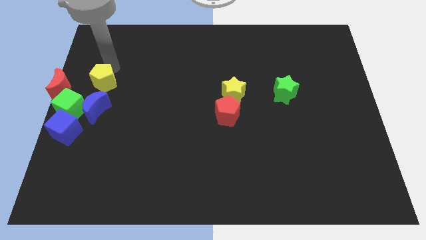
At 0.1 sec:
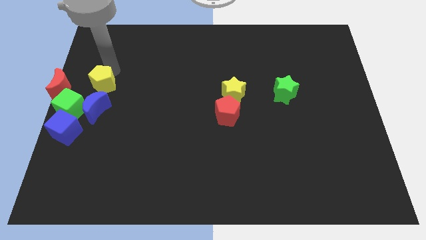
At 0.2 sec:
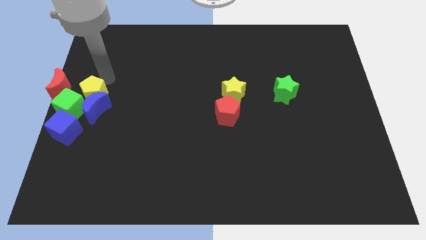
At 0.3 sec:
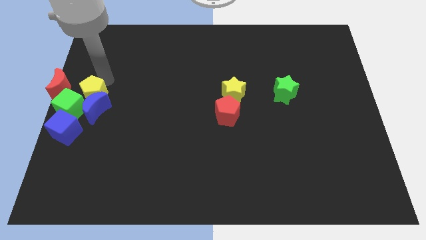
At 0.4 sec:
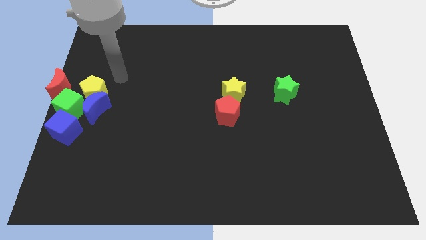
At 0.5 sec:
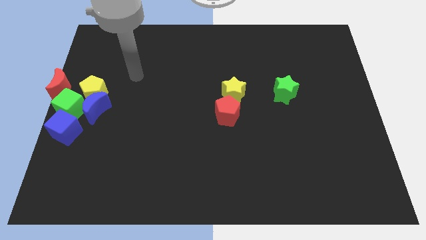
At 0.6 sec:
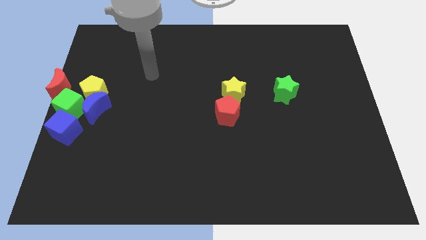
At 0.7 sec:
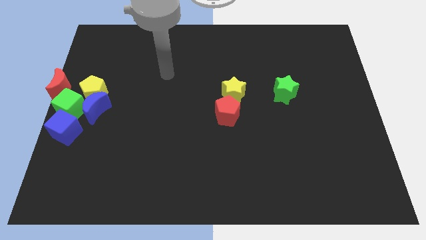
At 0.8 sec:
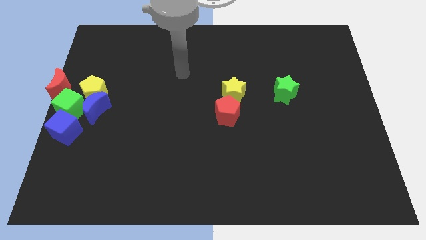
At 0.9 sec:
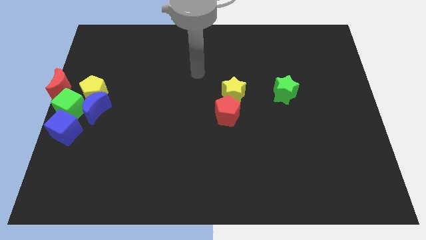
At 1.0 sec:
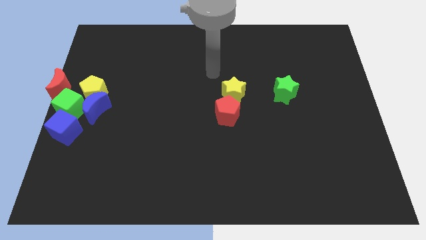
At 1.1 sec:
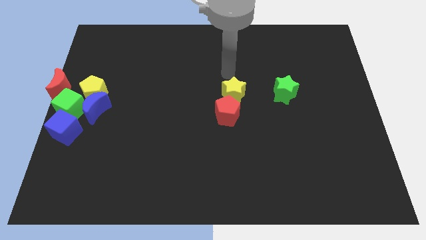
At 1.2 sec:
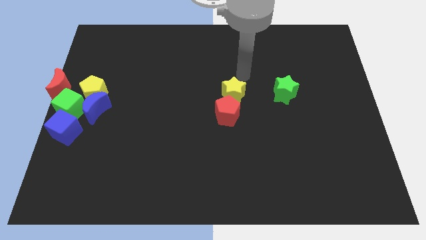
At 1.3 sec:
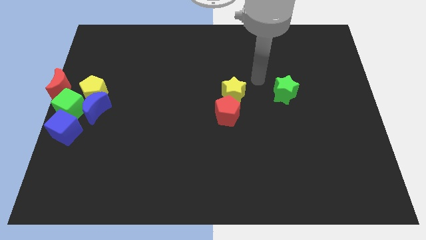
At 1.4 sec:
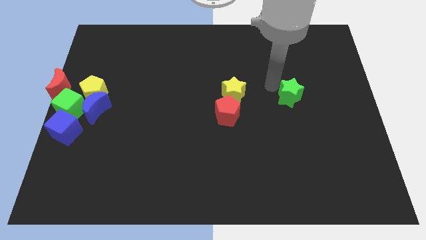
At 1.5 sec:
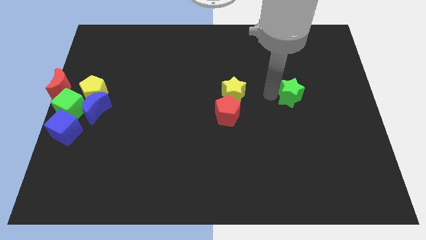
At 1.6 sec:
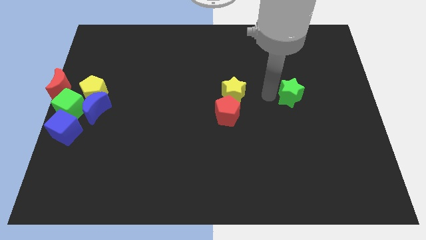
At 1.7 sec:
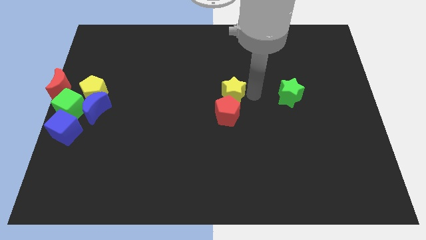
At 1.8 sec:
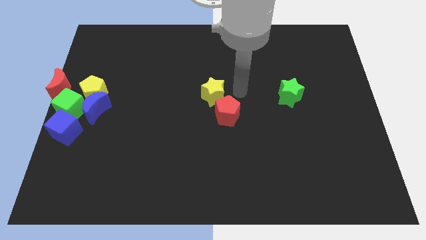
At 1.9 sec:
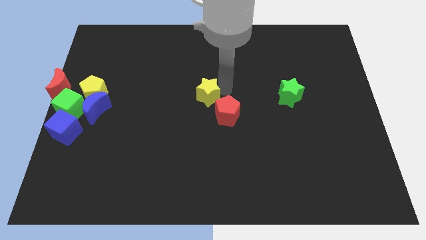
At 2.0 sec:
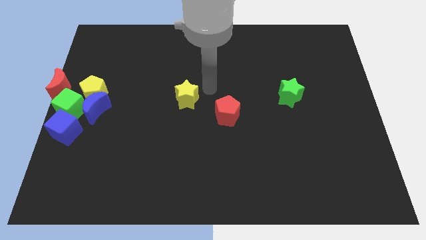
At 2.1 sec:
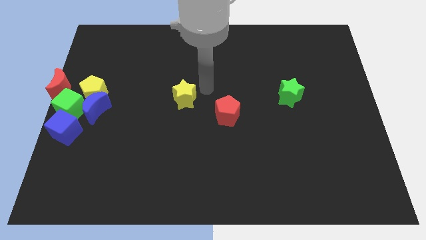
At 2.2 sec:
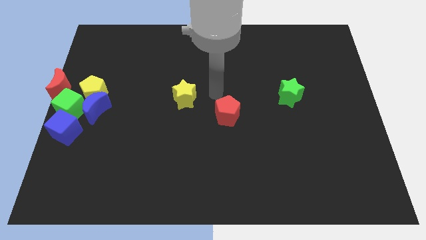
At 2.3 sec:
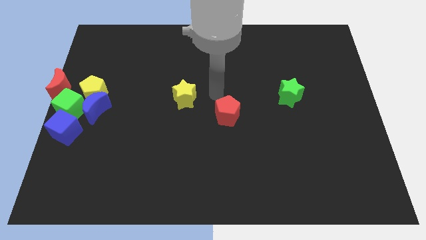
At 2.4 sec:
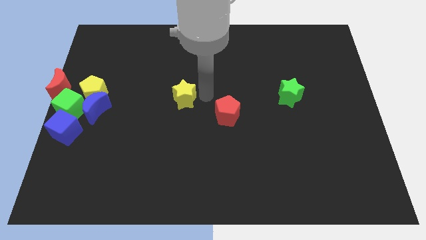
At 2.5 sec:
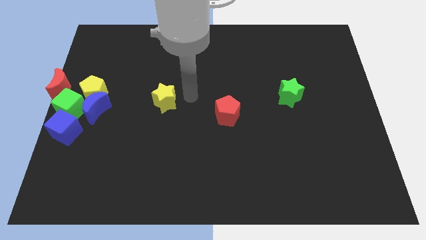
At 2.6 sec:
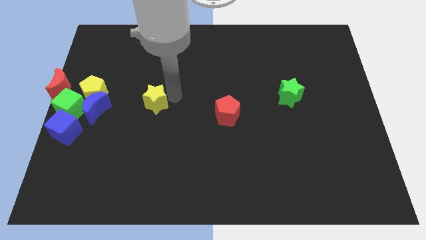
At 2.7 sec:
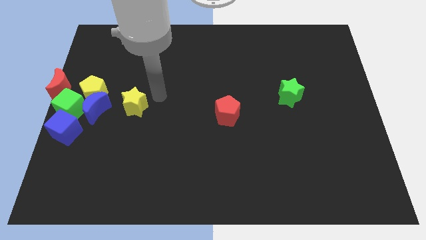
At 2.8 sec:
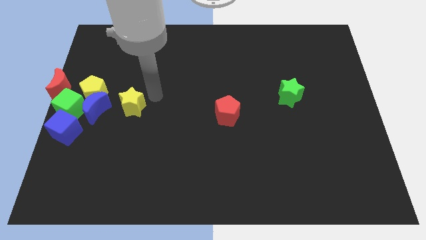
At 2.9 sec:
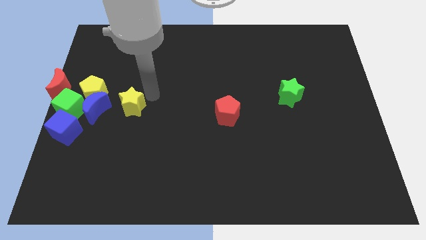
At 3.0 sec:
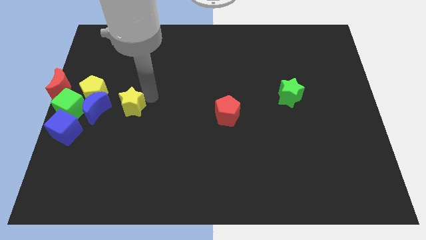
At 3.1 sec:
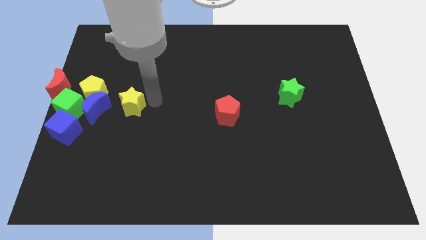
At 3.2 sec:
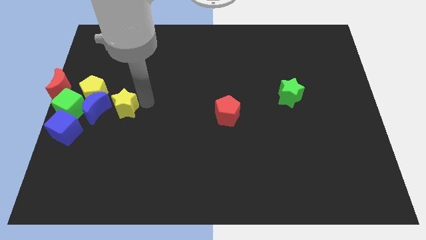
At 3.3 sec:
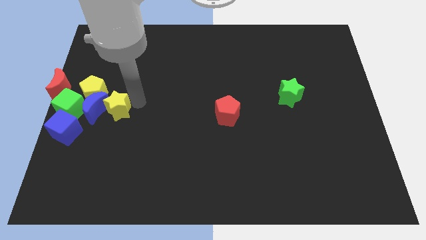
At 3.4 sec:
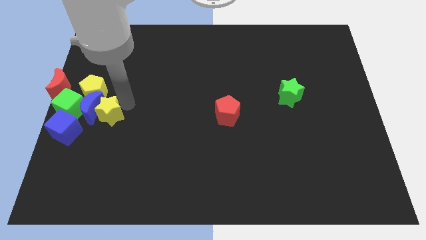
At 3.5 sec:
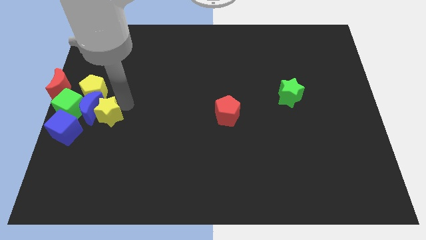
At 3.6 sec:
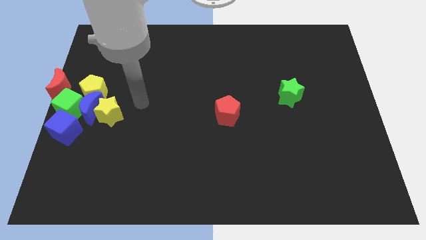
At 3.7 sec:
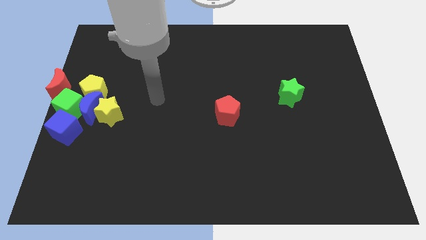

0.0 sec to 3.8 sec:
place yellow star right to the blue crescent

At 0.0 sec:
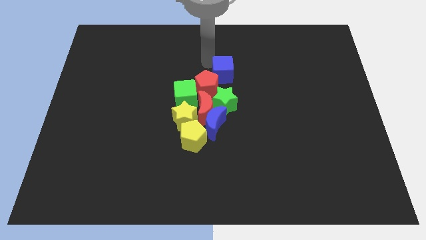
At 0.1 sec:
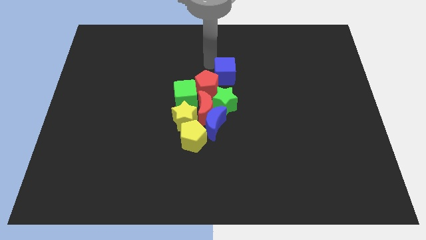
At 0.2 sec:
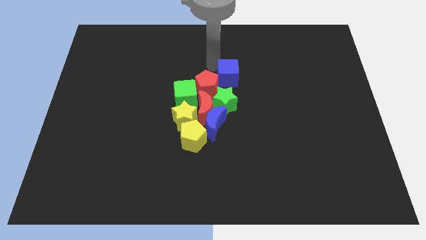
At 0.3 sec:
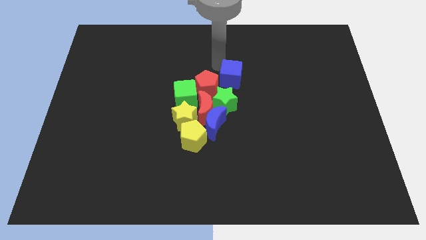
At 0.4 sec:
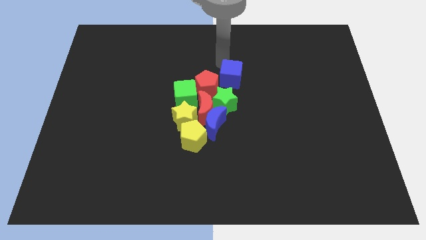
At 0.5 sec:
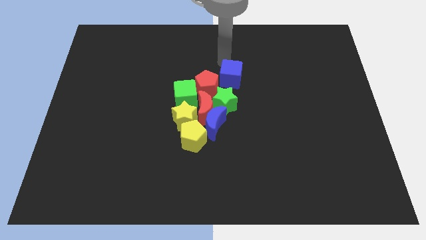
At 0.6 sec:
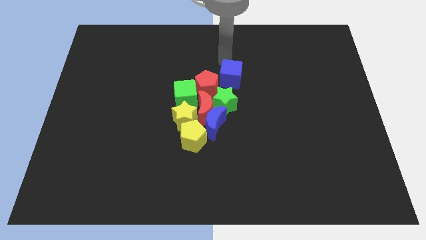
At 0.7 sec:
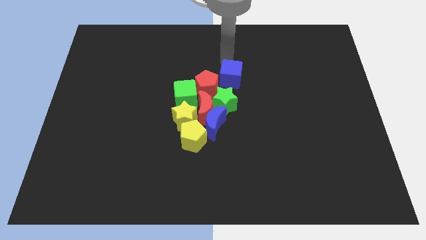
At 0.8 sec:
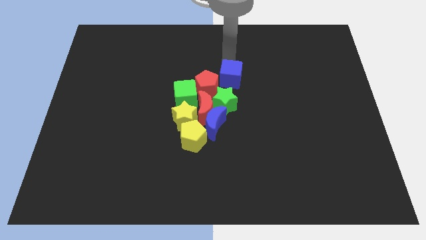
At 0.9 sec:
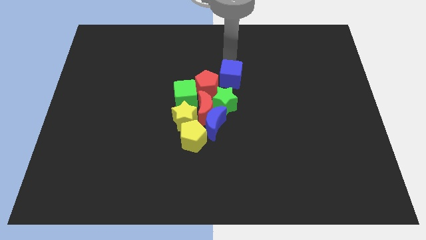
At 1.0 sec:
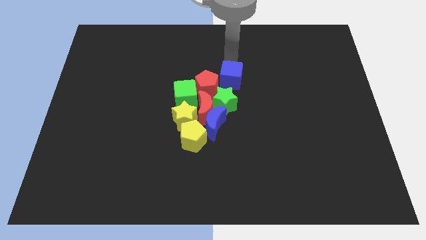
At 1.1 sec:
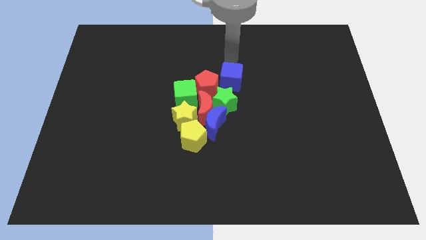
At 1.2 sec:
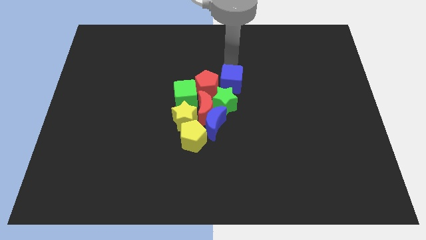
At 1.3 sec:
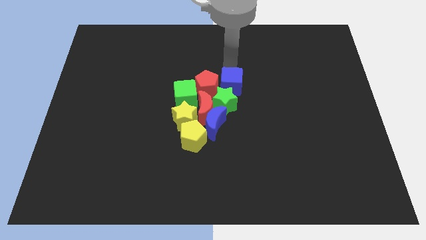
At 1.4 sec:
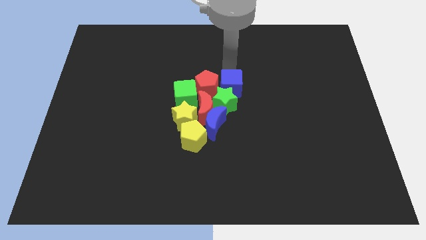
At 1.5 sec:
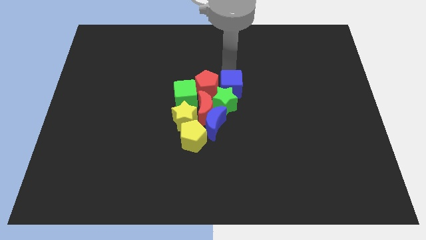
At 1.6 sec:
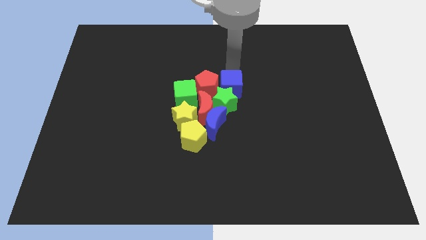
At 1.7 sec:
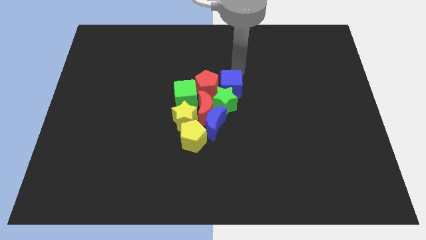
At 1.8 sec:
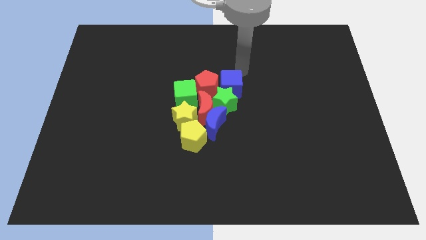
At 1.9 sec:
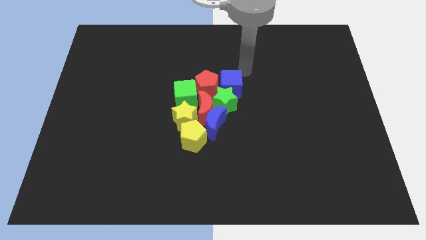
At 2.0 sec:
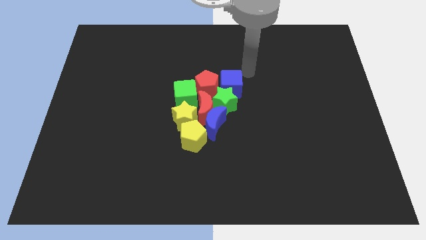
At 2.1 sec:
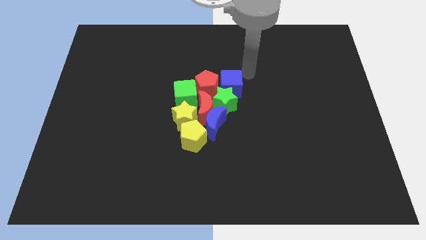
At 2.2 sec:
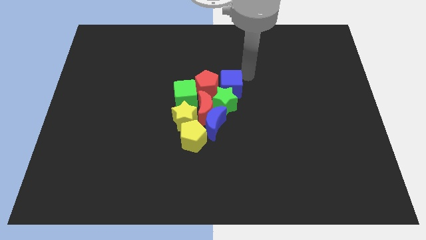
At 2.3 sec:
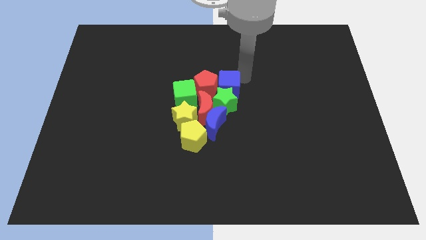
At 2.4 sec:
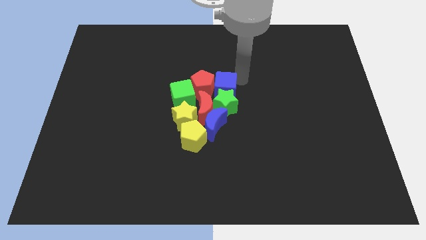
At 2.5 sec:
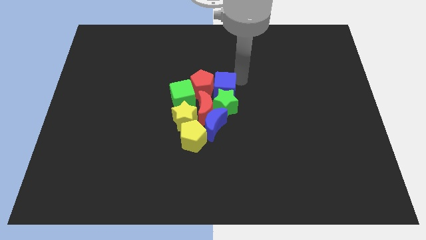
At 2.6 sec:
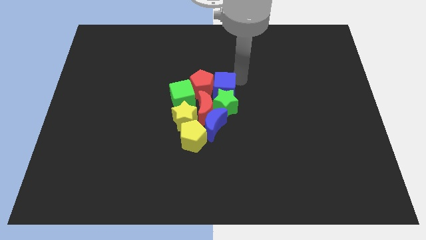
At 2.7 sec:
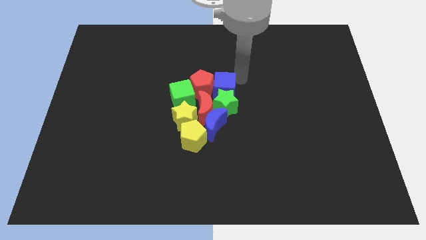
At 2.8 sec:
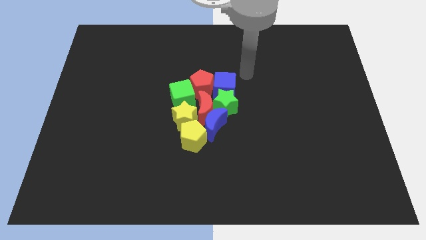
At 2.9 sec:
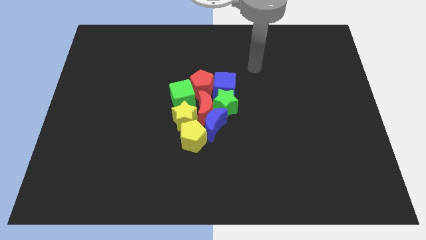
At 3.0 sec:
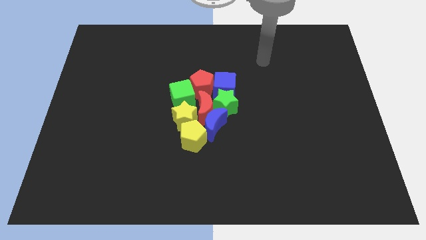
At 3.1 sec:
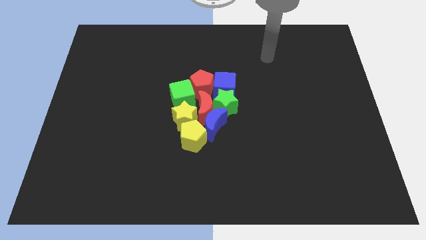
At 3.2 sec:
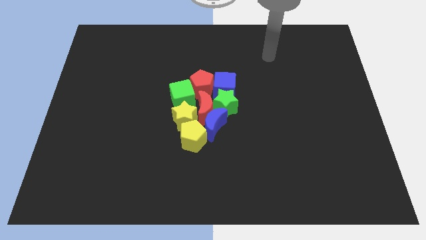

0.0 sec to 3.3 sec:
push the blue cube into red pentagon

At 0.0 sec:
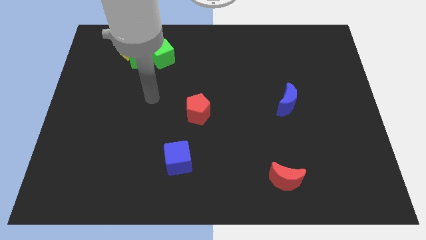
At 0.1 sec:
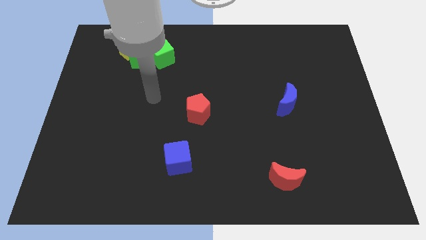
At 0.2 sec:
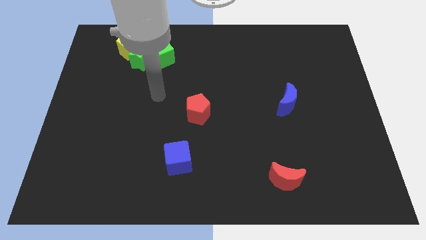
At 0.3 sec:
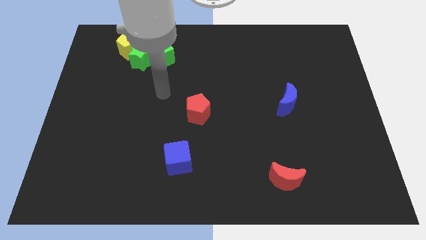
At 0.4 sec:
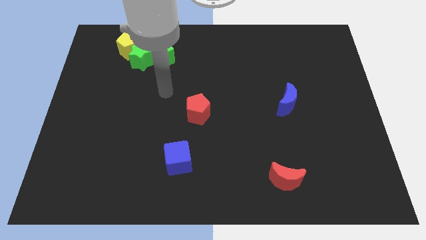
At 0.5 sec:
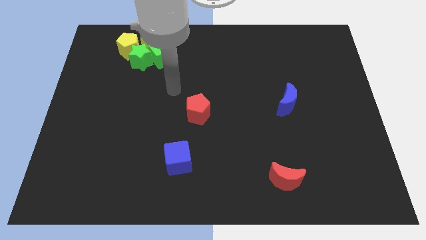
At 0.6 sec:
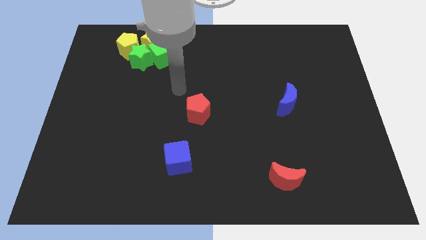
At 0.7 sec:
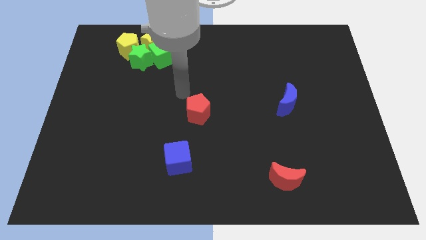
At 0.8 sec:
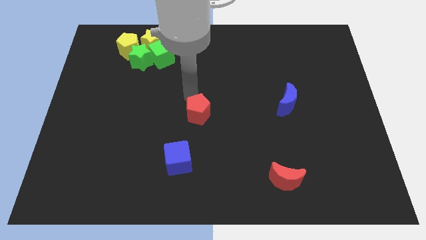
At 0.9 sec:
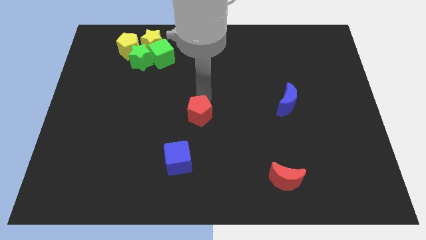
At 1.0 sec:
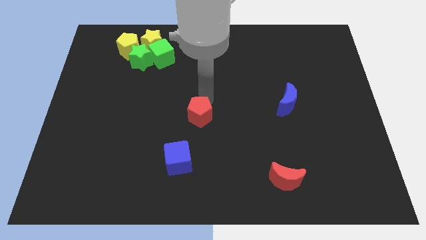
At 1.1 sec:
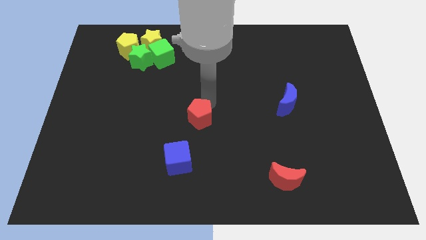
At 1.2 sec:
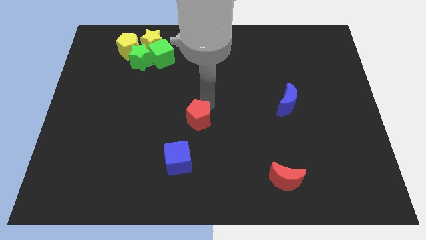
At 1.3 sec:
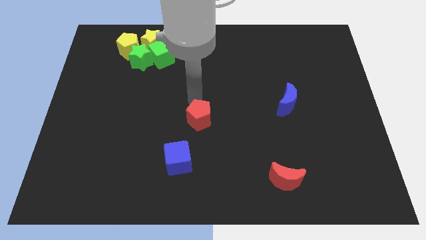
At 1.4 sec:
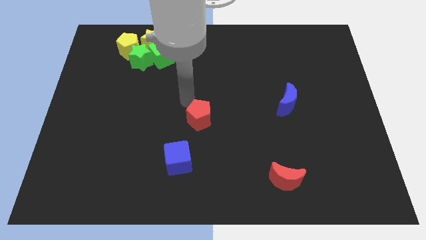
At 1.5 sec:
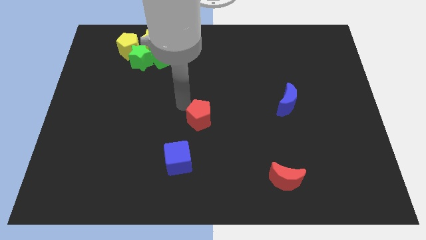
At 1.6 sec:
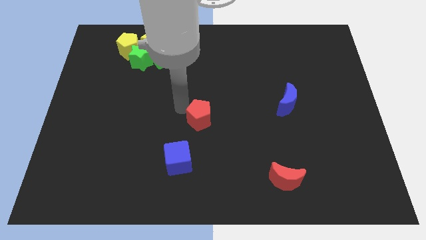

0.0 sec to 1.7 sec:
push the red pentagon slightly to the bottom side of the board

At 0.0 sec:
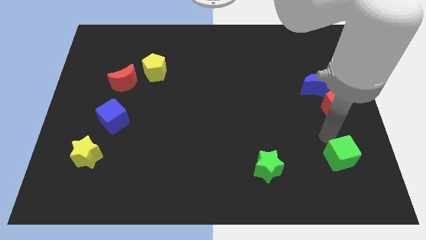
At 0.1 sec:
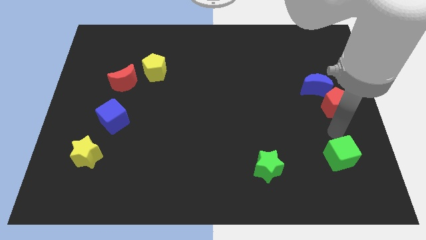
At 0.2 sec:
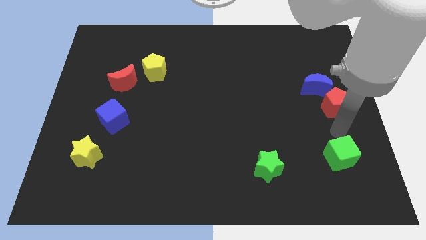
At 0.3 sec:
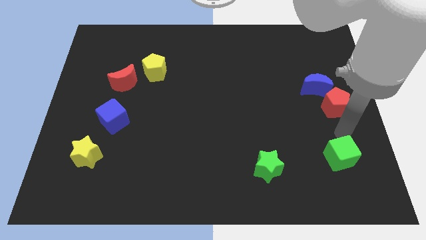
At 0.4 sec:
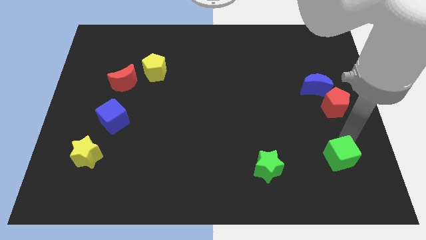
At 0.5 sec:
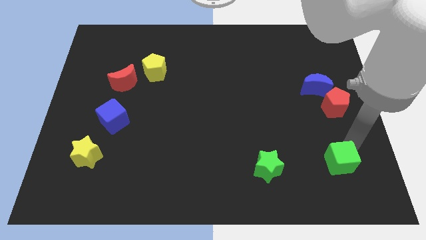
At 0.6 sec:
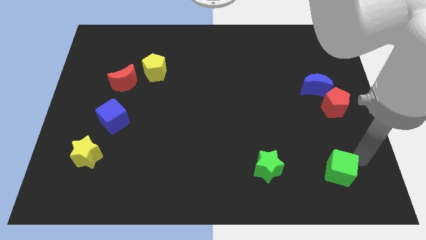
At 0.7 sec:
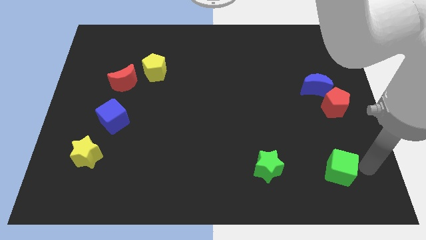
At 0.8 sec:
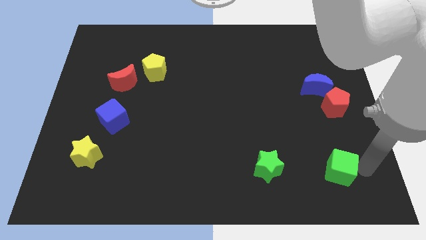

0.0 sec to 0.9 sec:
put green cube vertically below red pentagon
